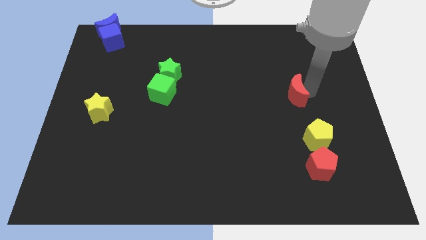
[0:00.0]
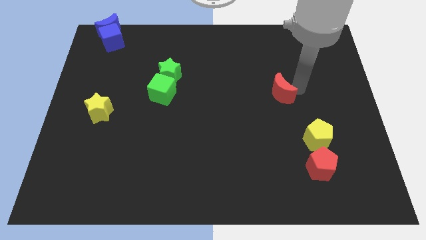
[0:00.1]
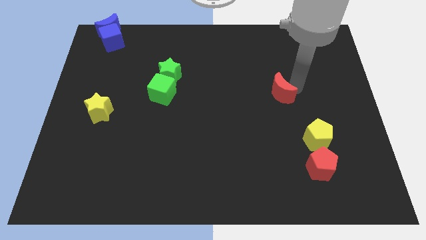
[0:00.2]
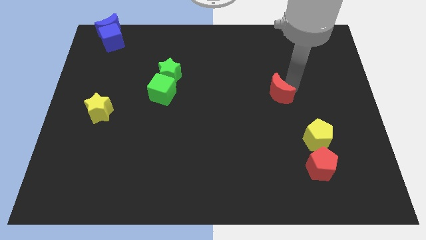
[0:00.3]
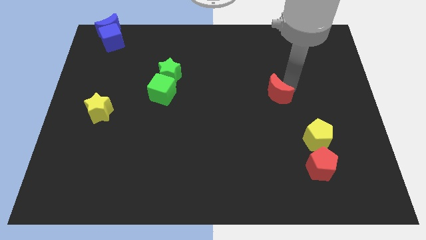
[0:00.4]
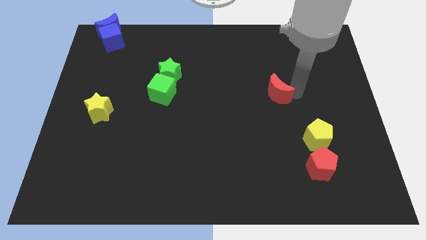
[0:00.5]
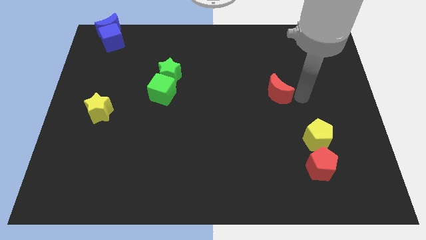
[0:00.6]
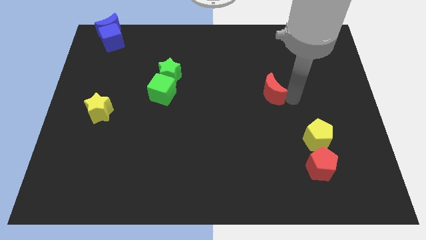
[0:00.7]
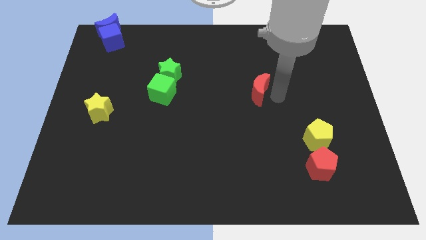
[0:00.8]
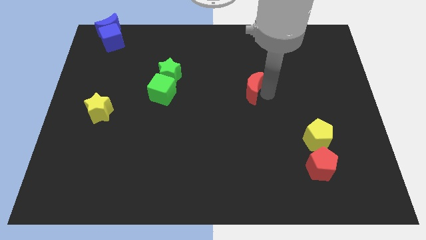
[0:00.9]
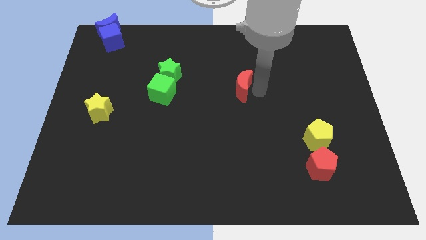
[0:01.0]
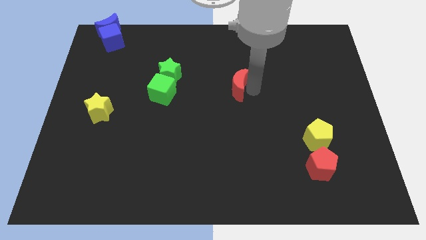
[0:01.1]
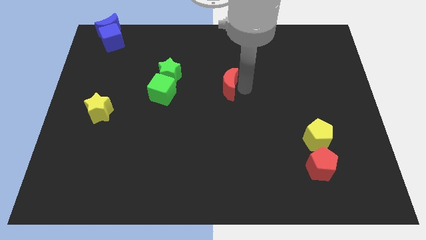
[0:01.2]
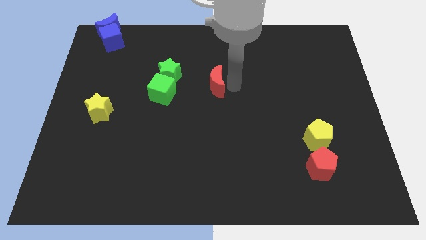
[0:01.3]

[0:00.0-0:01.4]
place the red moon at the center of the board

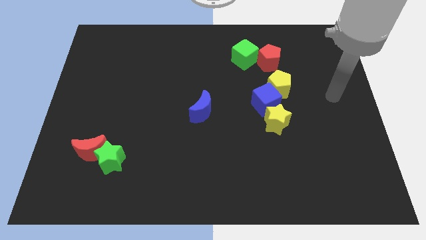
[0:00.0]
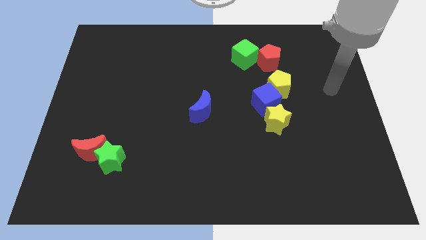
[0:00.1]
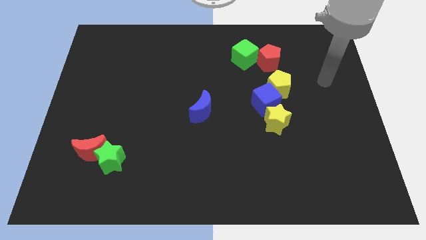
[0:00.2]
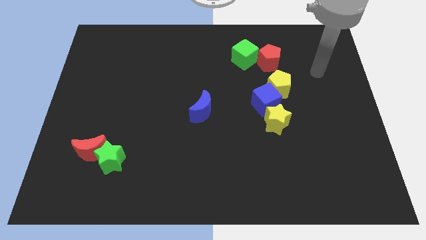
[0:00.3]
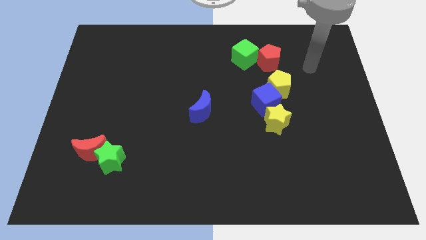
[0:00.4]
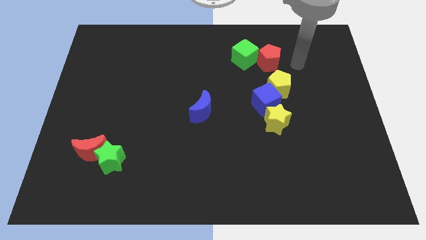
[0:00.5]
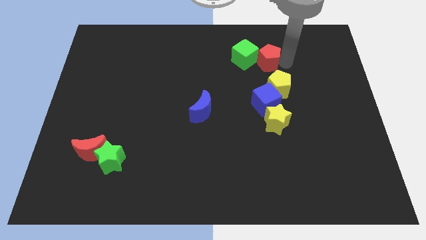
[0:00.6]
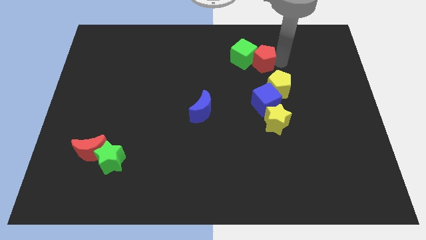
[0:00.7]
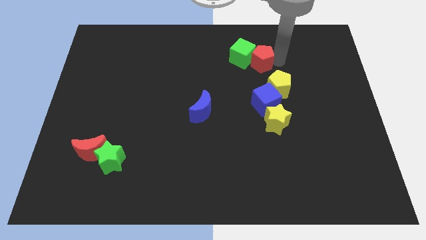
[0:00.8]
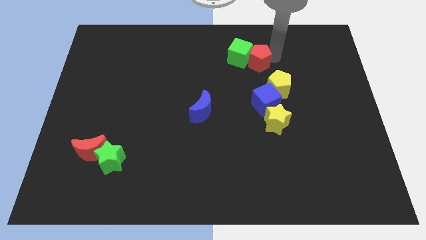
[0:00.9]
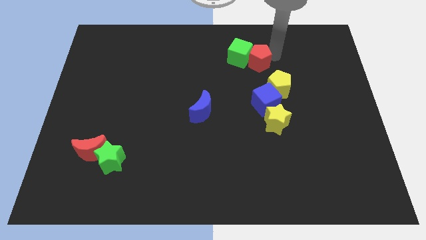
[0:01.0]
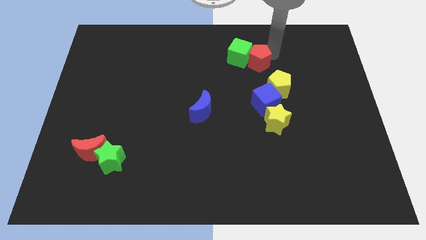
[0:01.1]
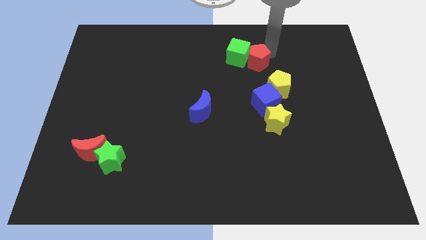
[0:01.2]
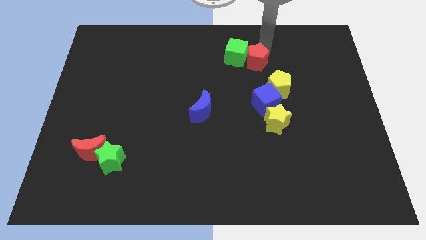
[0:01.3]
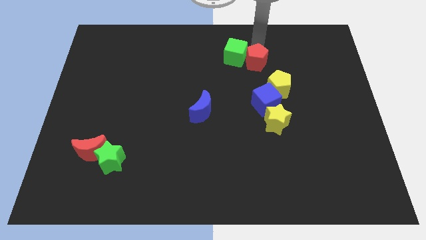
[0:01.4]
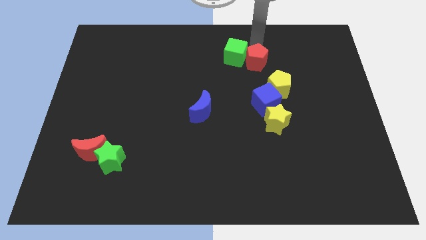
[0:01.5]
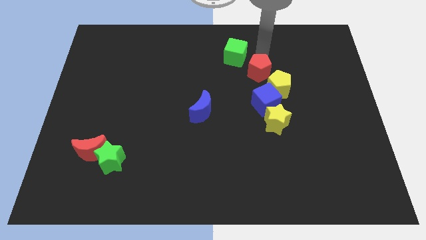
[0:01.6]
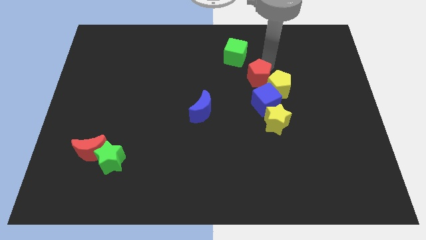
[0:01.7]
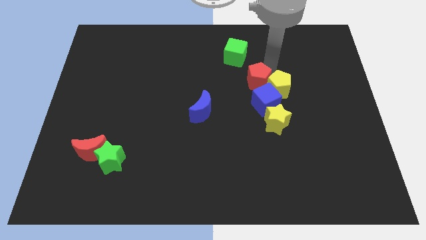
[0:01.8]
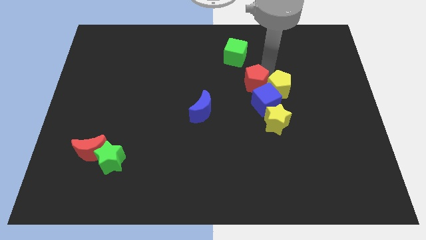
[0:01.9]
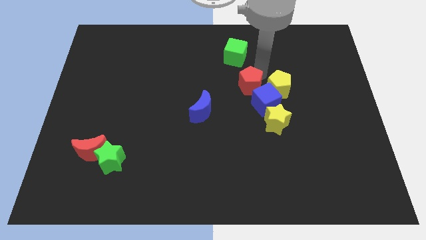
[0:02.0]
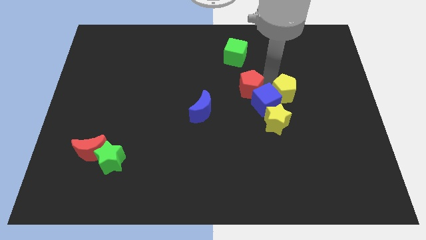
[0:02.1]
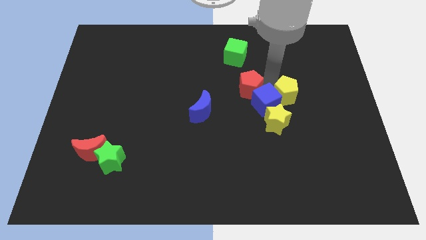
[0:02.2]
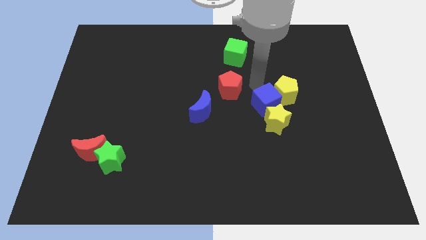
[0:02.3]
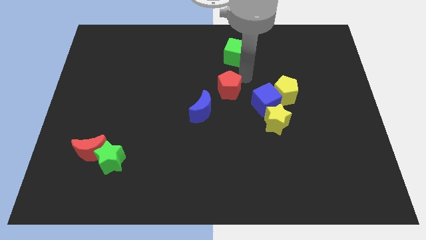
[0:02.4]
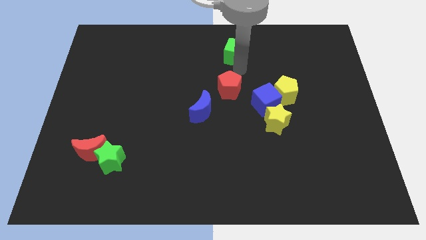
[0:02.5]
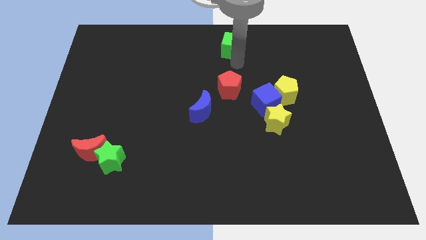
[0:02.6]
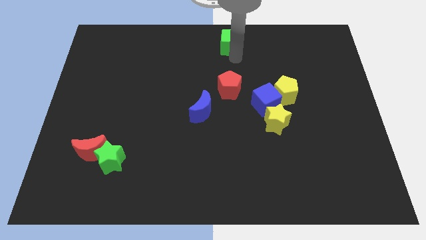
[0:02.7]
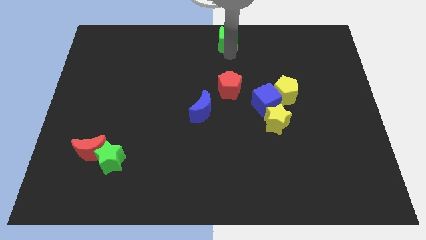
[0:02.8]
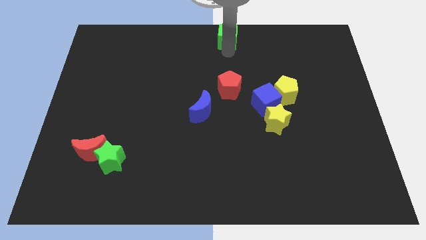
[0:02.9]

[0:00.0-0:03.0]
place green towards up middle end of the board

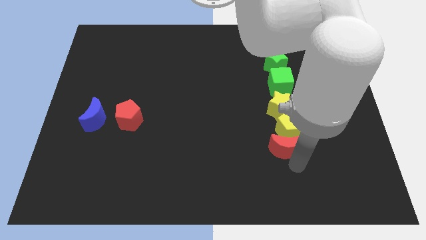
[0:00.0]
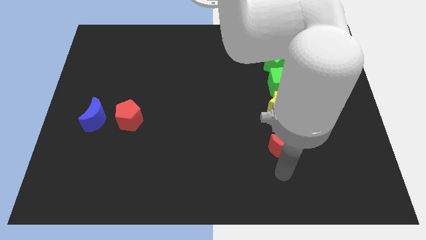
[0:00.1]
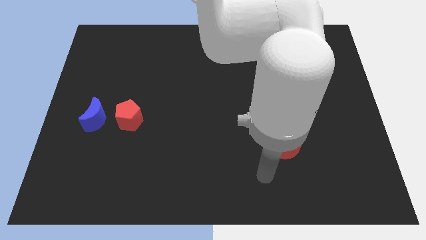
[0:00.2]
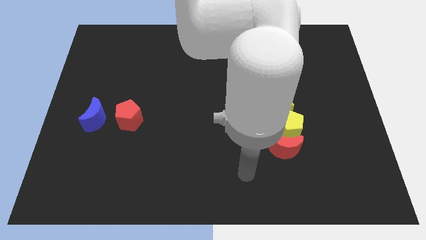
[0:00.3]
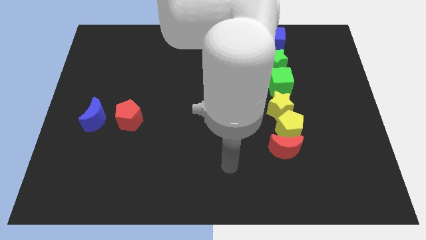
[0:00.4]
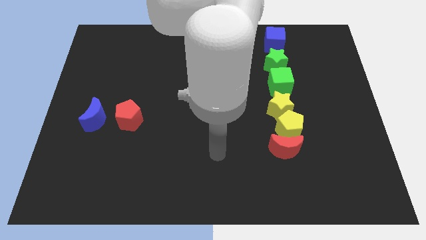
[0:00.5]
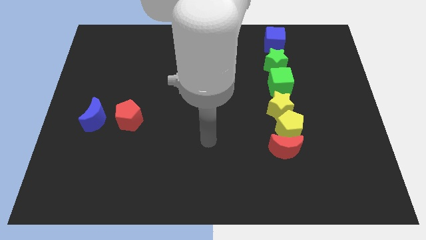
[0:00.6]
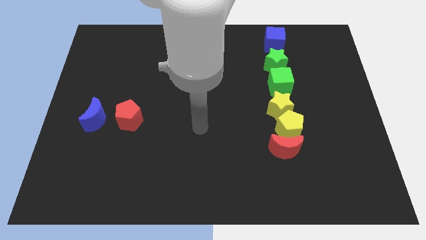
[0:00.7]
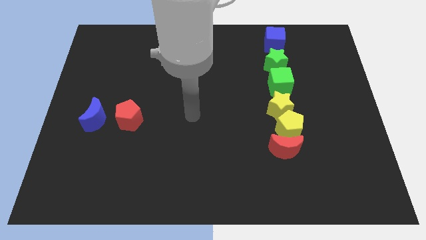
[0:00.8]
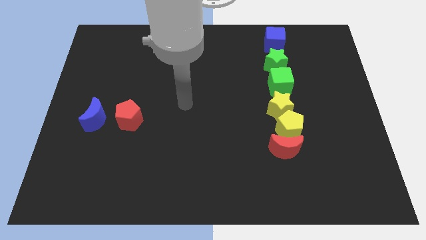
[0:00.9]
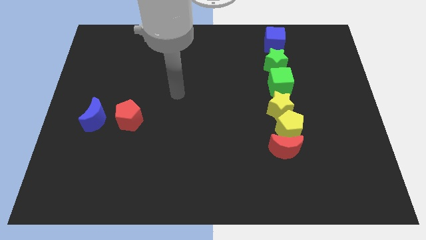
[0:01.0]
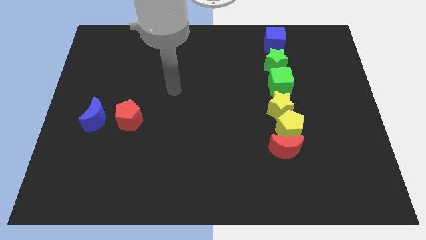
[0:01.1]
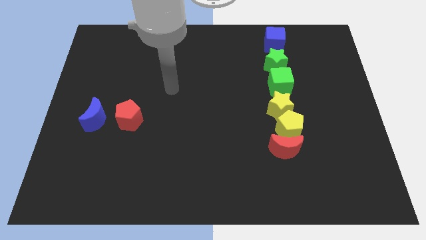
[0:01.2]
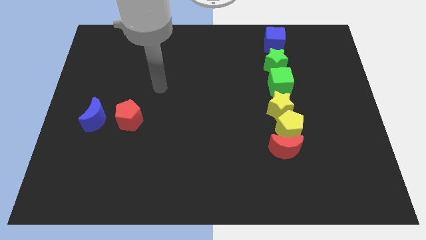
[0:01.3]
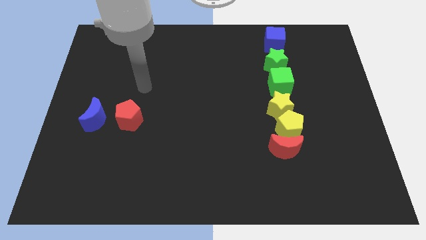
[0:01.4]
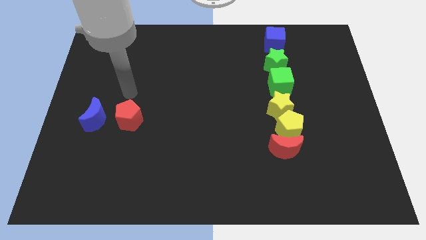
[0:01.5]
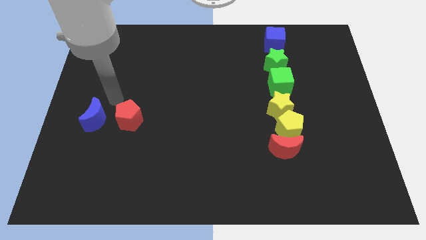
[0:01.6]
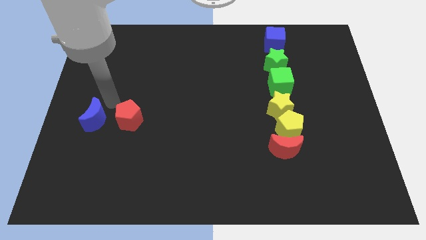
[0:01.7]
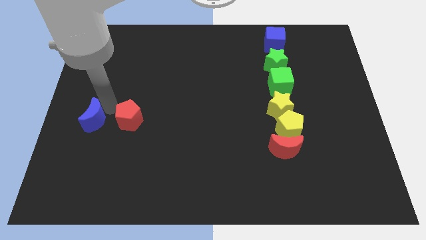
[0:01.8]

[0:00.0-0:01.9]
move your arm towards red pentagon

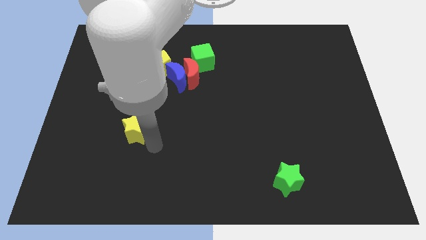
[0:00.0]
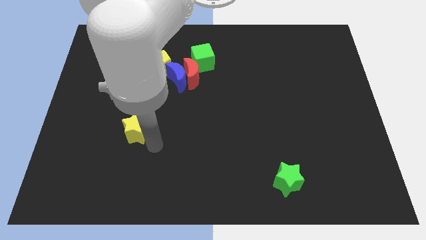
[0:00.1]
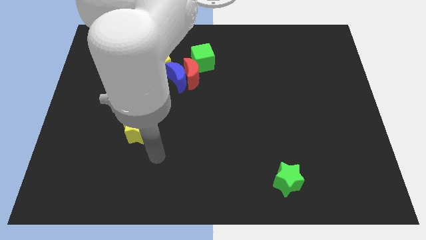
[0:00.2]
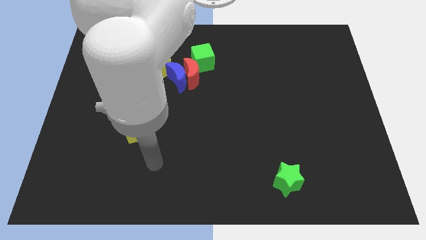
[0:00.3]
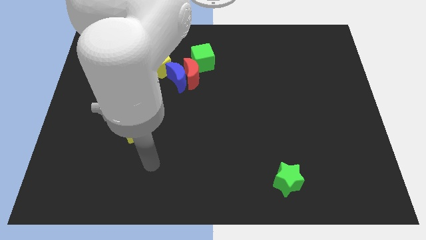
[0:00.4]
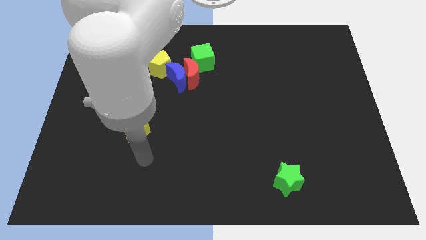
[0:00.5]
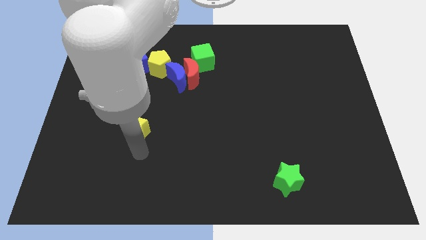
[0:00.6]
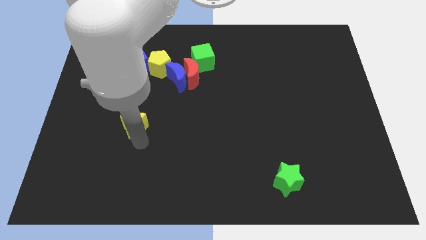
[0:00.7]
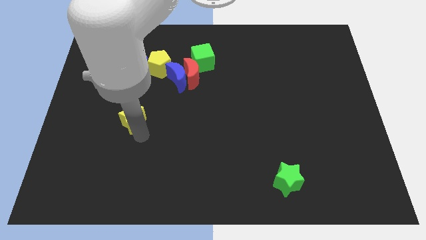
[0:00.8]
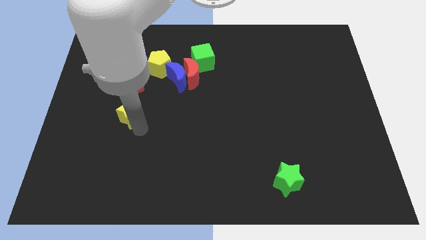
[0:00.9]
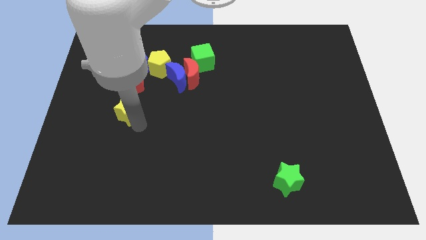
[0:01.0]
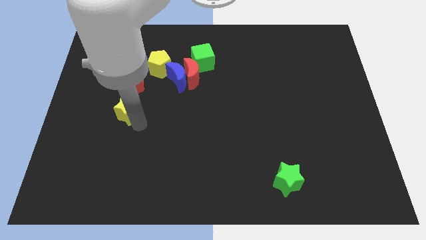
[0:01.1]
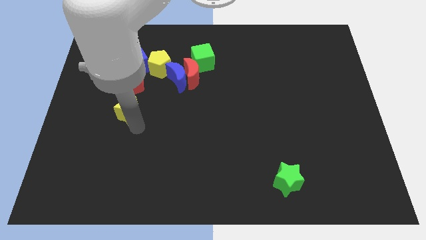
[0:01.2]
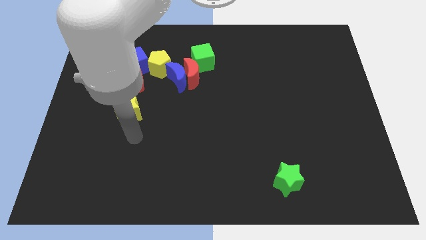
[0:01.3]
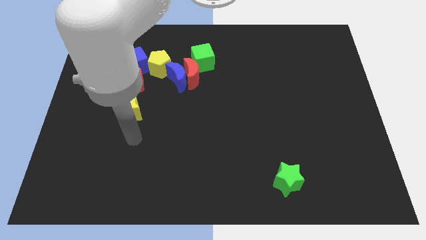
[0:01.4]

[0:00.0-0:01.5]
push the yellow star to the group of blocks

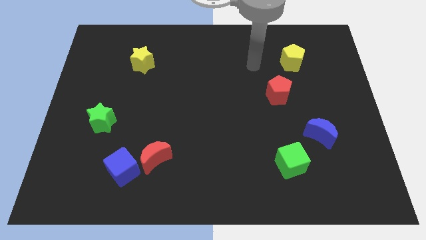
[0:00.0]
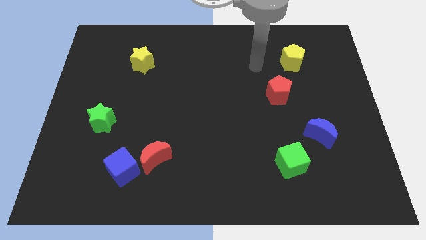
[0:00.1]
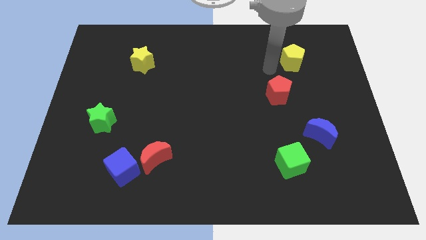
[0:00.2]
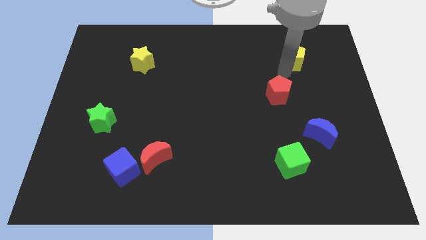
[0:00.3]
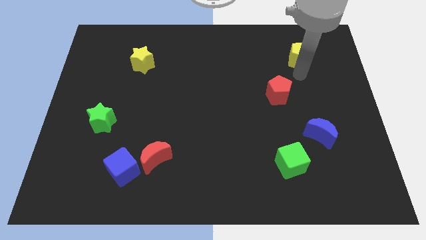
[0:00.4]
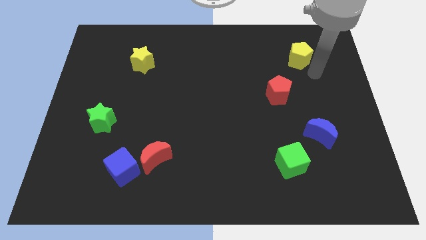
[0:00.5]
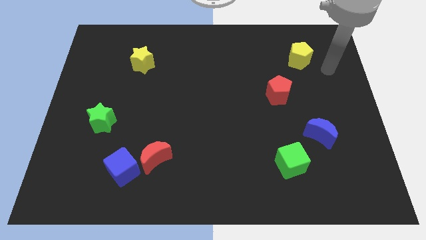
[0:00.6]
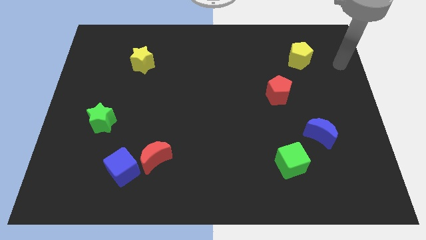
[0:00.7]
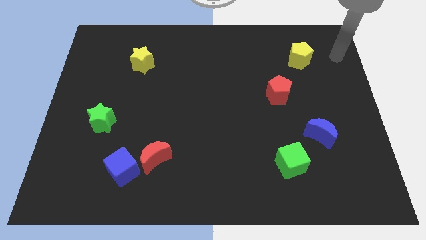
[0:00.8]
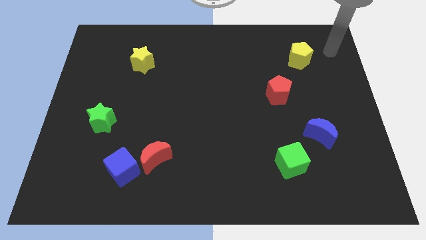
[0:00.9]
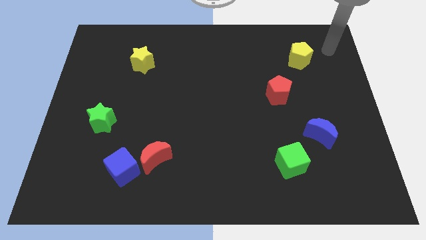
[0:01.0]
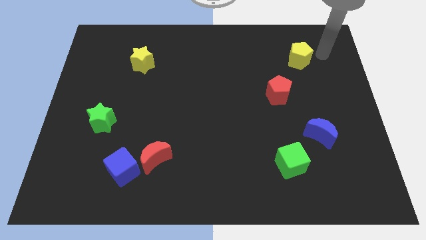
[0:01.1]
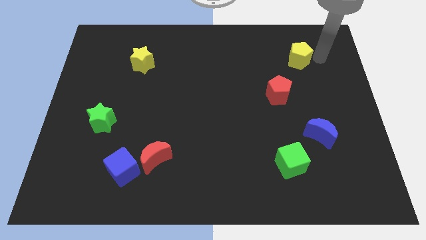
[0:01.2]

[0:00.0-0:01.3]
move your arm to the right of the yellow pentagon
